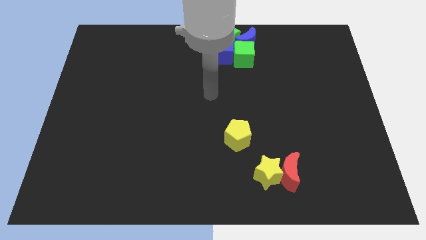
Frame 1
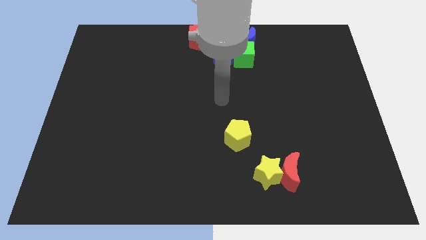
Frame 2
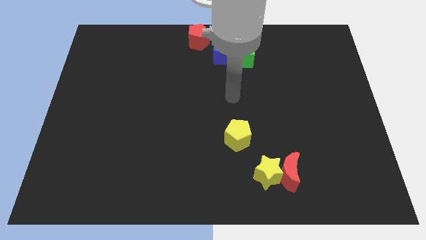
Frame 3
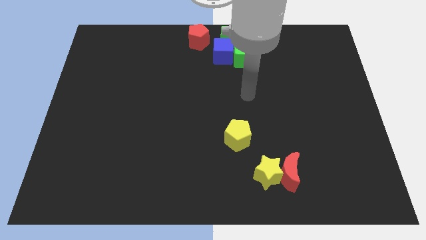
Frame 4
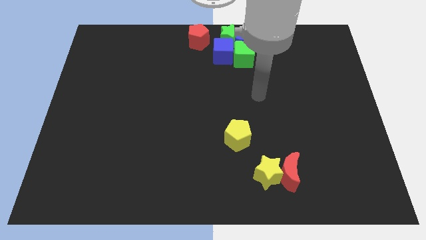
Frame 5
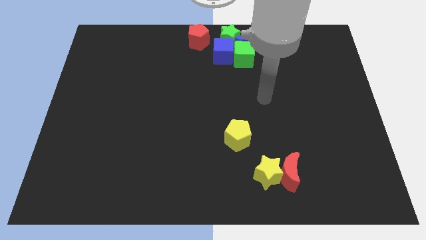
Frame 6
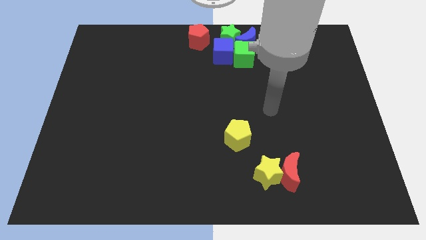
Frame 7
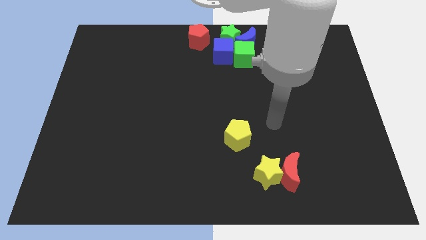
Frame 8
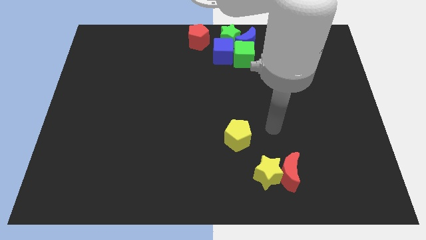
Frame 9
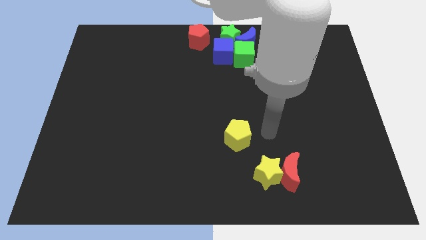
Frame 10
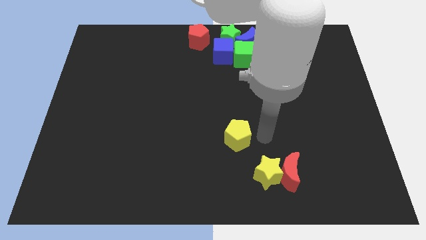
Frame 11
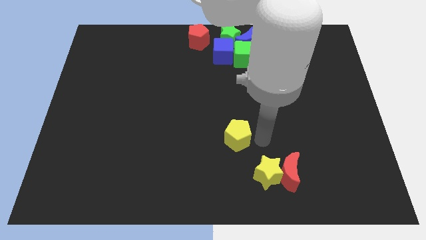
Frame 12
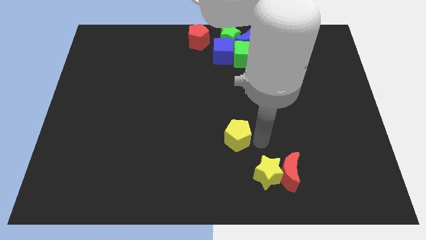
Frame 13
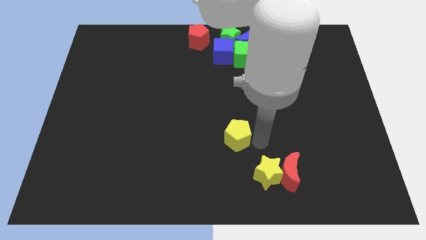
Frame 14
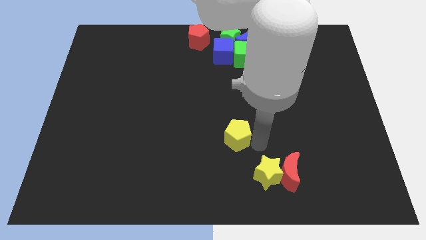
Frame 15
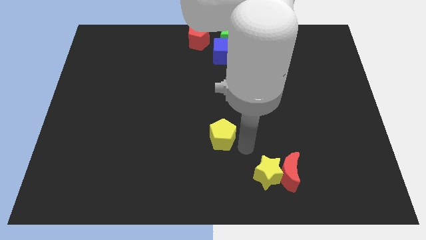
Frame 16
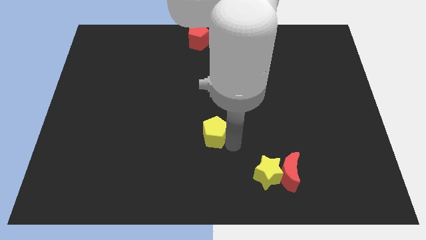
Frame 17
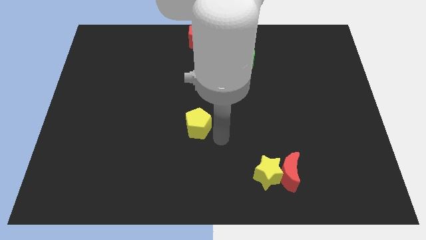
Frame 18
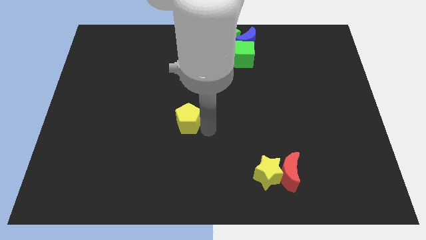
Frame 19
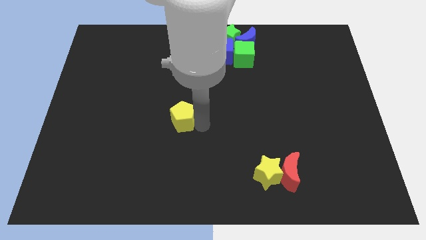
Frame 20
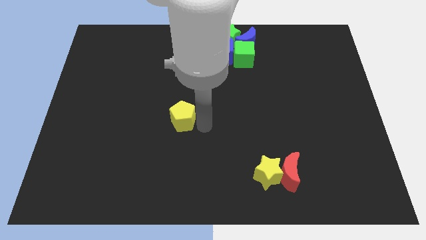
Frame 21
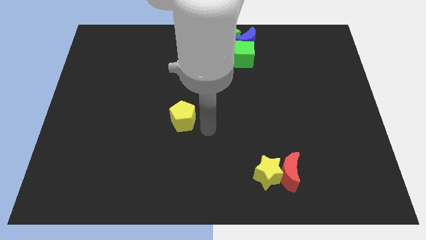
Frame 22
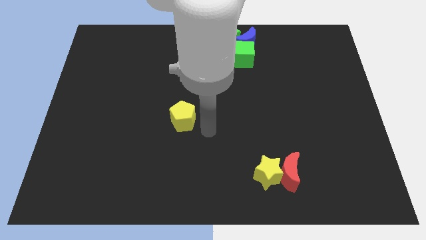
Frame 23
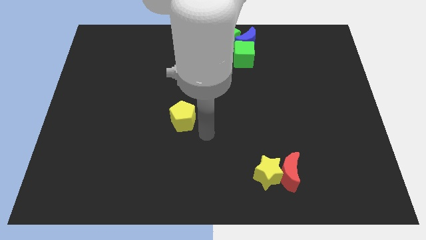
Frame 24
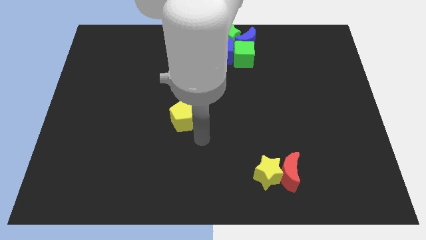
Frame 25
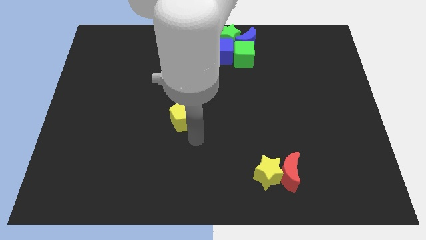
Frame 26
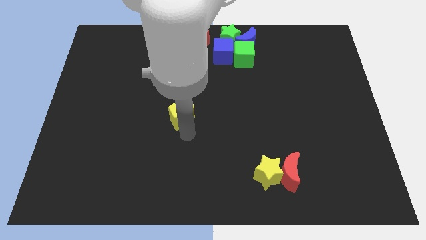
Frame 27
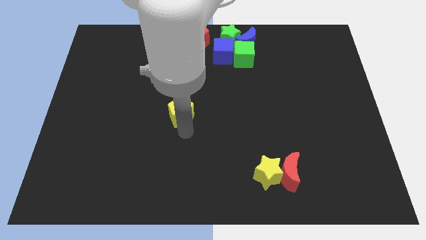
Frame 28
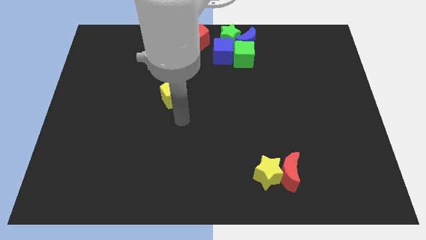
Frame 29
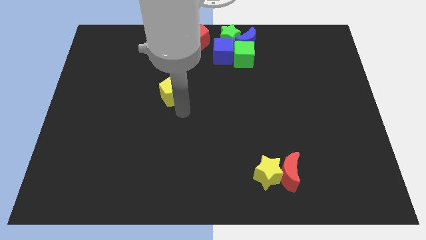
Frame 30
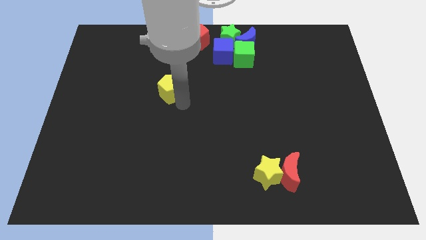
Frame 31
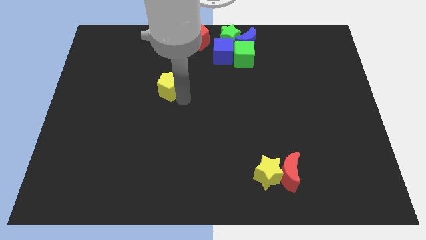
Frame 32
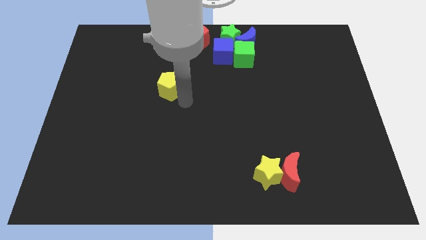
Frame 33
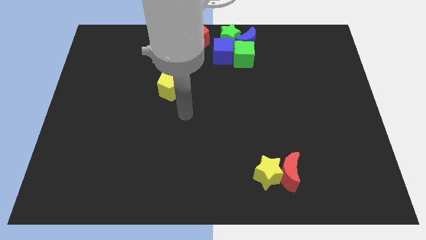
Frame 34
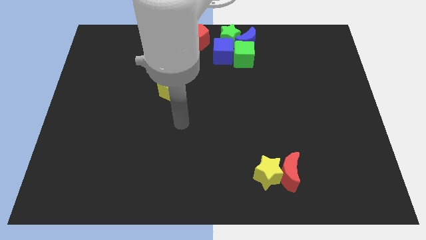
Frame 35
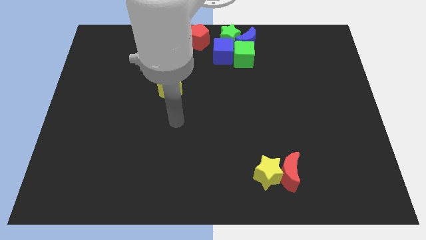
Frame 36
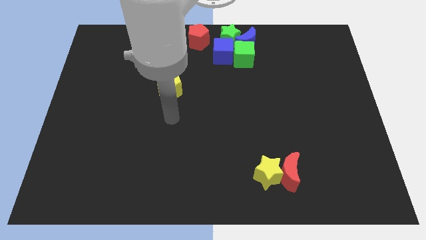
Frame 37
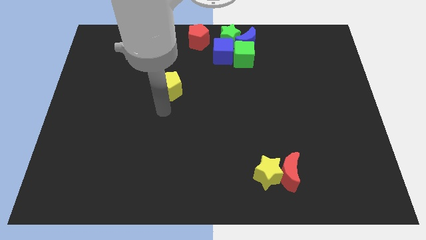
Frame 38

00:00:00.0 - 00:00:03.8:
push the yellow pentagon to the top left side of the board

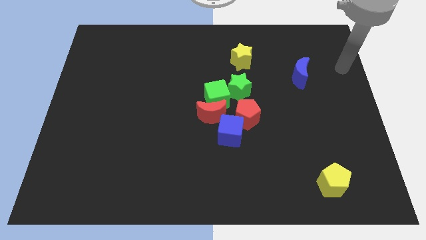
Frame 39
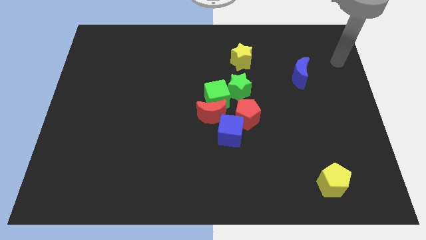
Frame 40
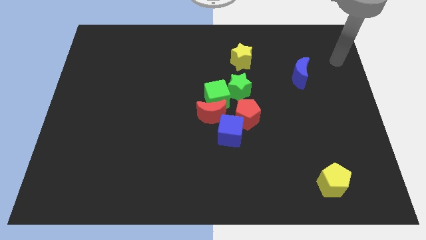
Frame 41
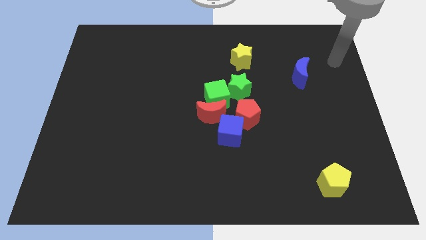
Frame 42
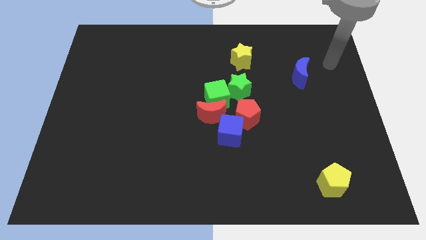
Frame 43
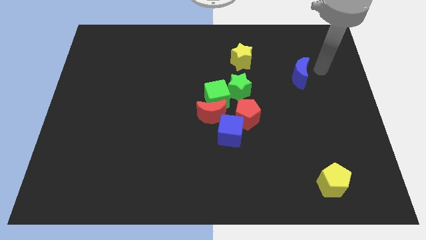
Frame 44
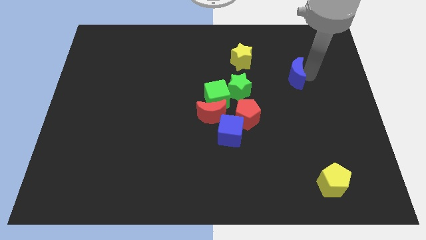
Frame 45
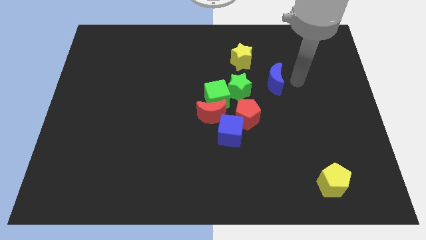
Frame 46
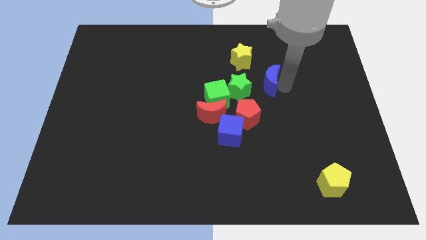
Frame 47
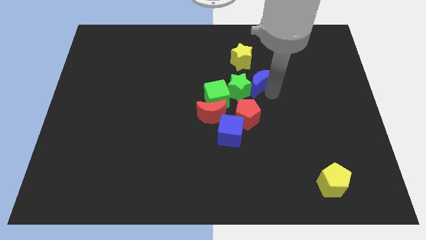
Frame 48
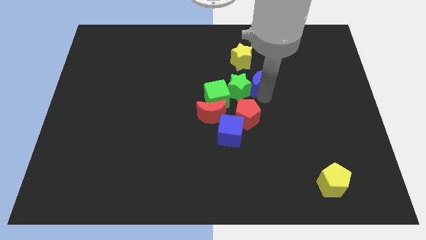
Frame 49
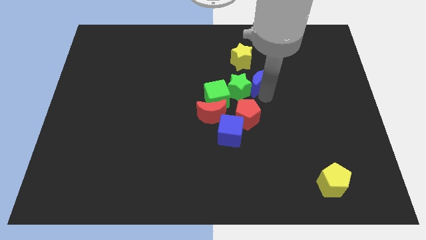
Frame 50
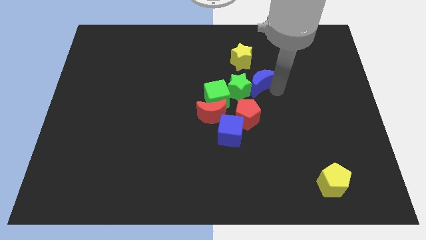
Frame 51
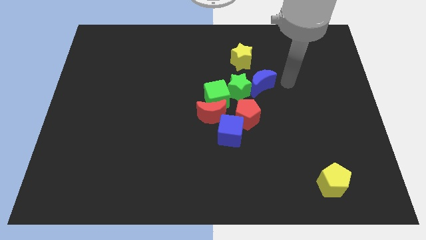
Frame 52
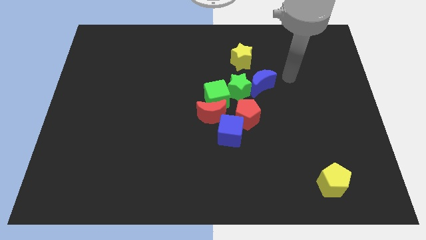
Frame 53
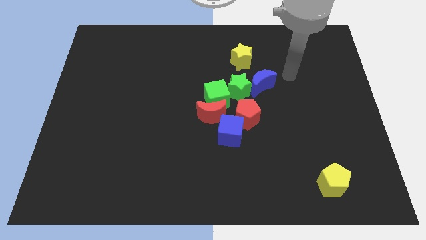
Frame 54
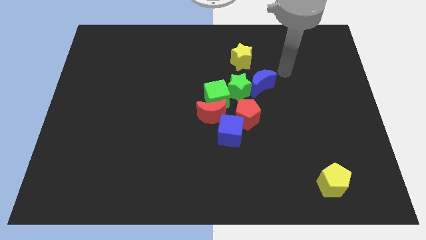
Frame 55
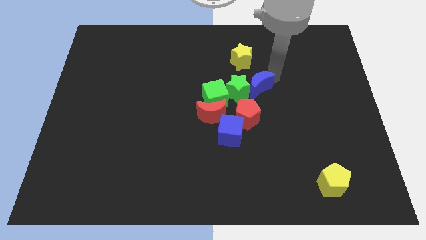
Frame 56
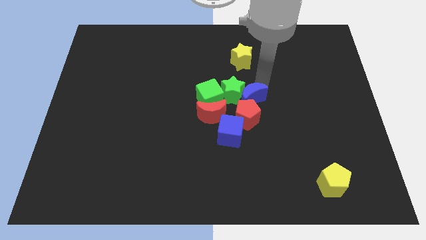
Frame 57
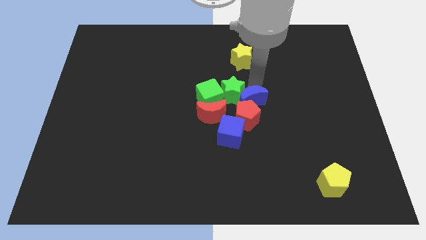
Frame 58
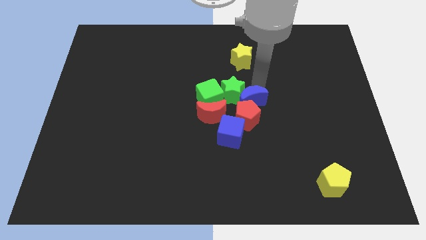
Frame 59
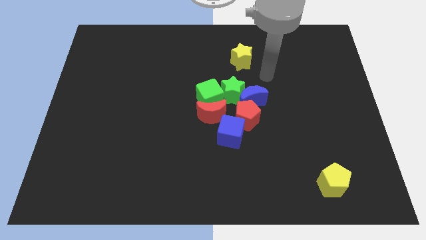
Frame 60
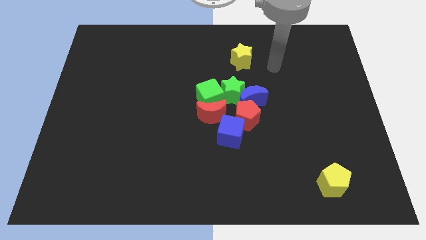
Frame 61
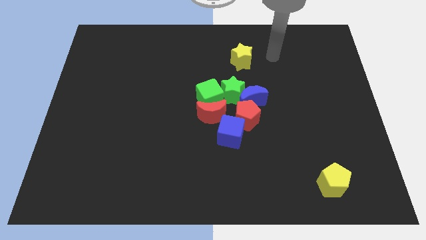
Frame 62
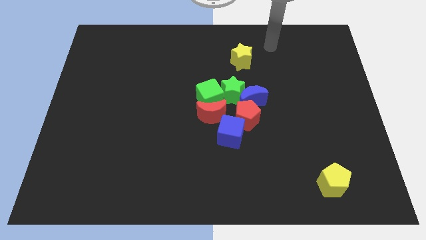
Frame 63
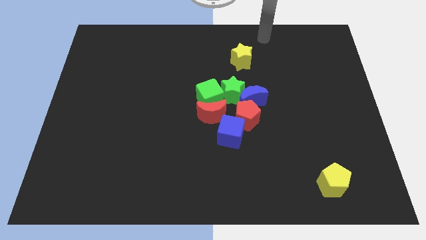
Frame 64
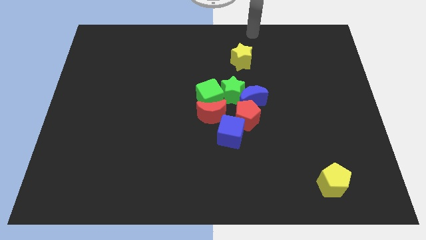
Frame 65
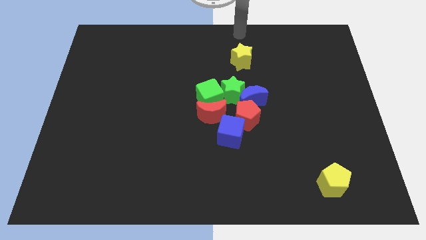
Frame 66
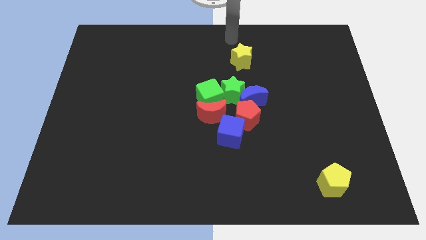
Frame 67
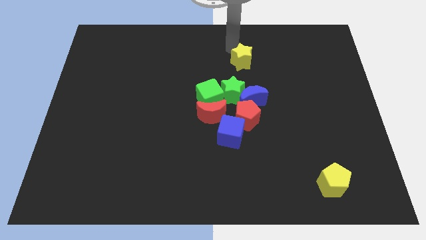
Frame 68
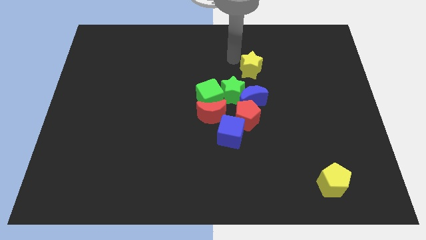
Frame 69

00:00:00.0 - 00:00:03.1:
move the blue crescent to the top of the red pentagon

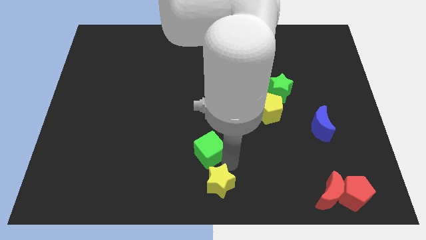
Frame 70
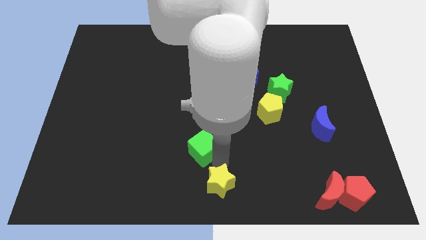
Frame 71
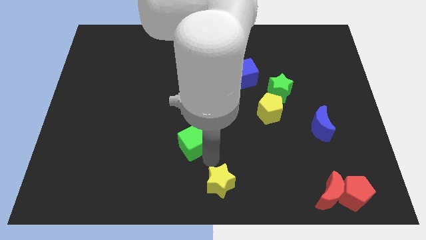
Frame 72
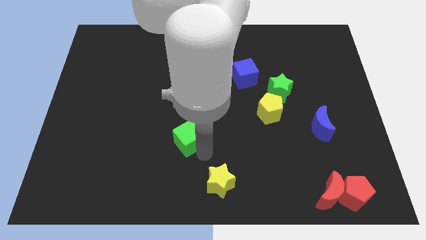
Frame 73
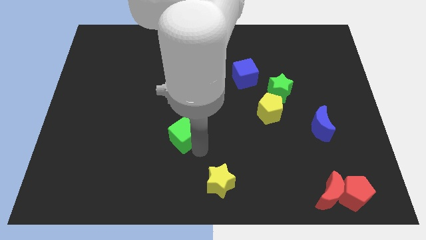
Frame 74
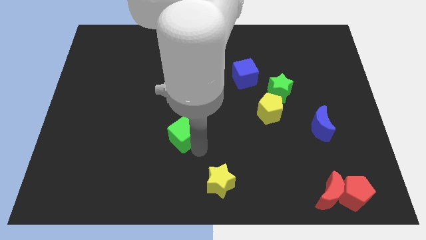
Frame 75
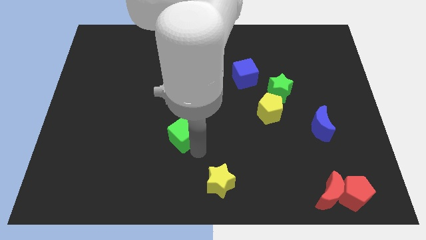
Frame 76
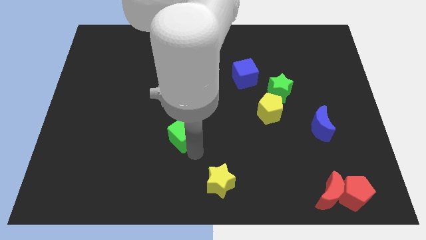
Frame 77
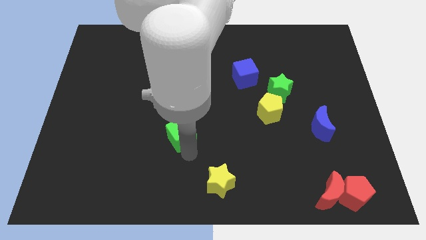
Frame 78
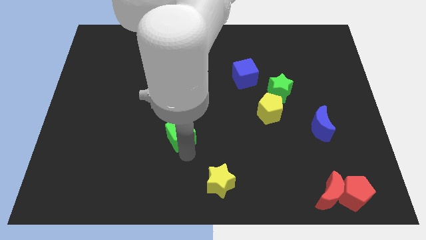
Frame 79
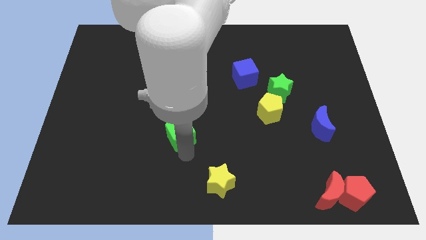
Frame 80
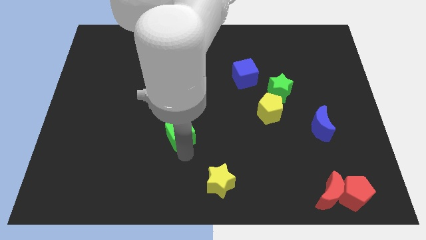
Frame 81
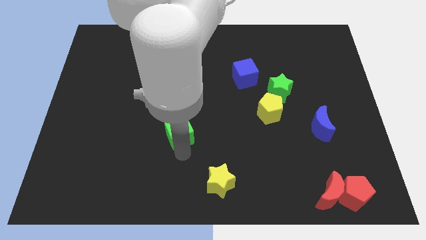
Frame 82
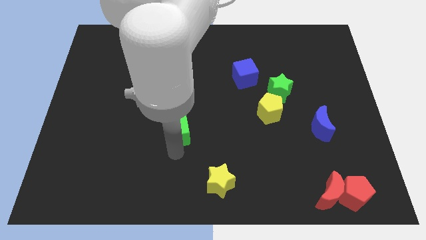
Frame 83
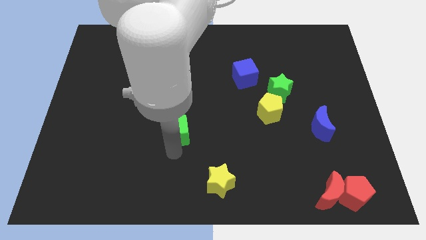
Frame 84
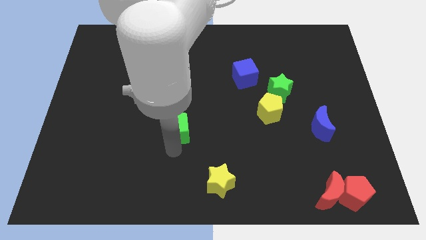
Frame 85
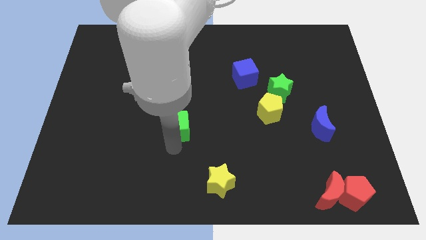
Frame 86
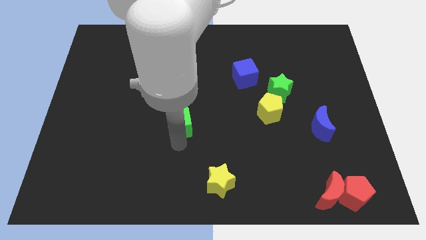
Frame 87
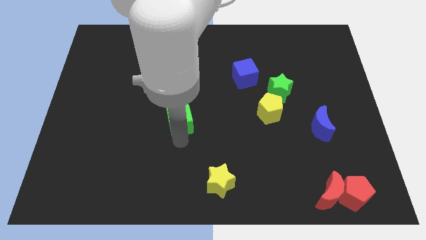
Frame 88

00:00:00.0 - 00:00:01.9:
drag the green cube slightly upwards

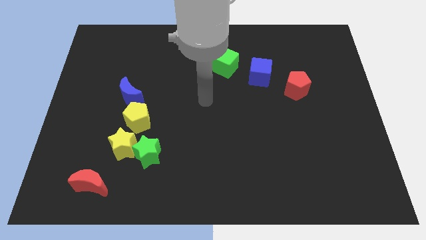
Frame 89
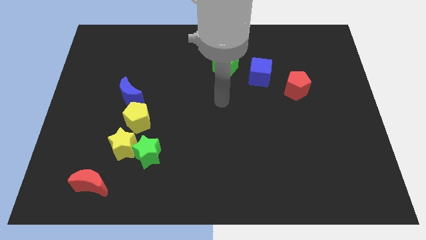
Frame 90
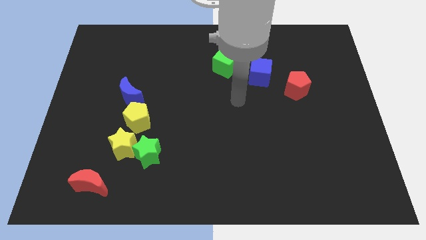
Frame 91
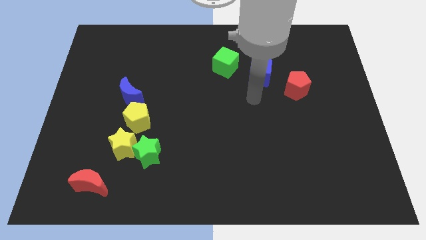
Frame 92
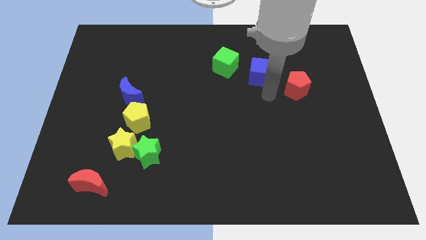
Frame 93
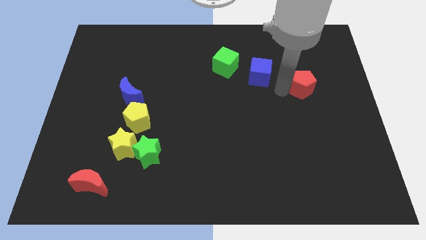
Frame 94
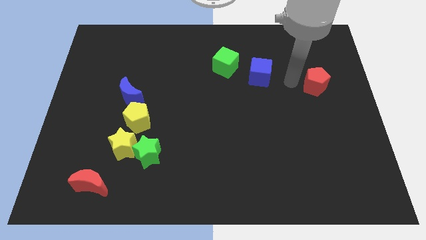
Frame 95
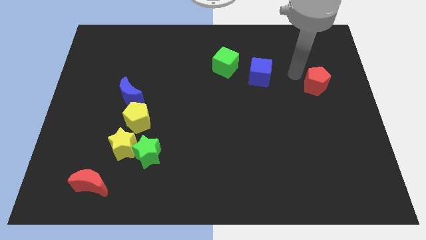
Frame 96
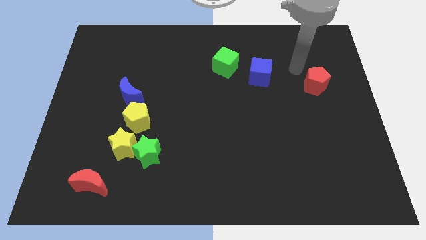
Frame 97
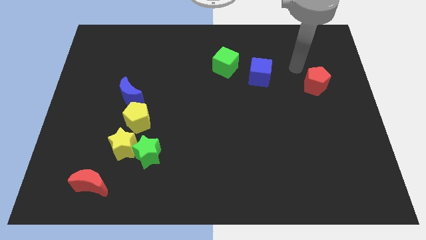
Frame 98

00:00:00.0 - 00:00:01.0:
move the red pentagon to the right of the board
